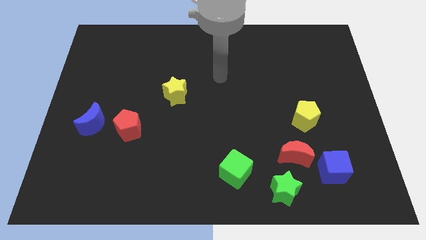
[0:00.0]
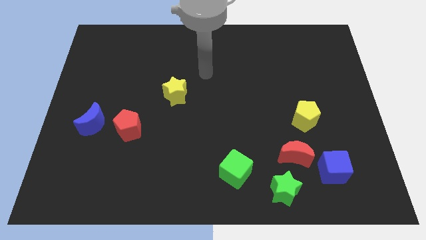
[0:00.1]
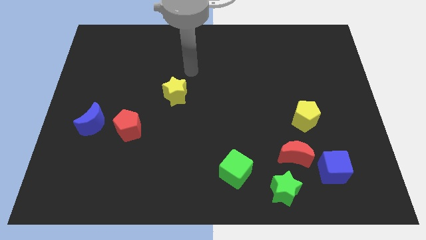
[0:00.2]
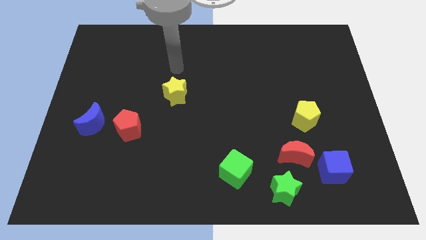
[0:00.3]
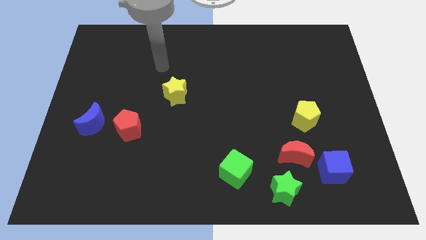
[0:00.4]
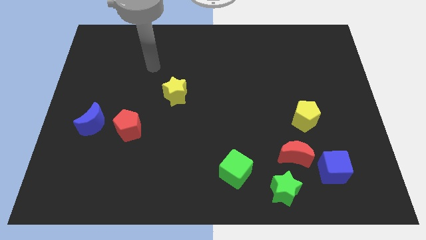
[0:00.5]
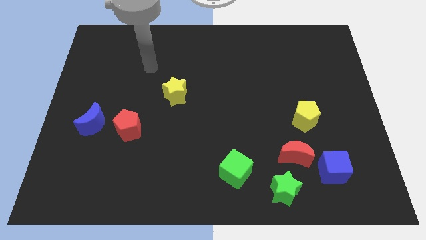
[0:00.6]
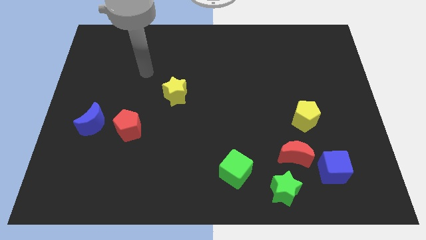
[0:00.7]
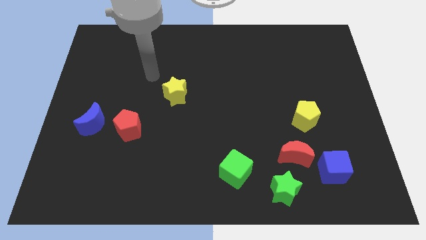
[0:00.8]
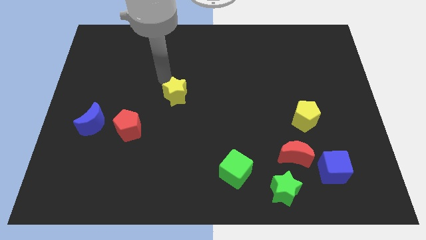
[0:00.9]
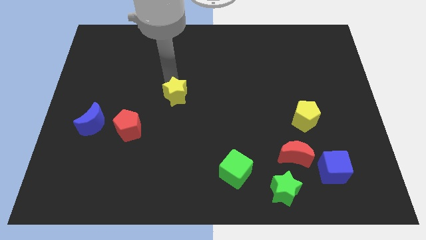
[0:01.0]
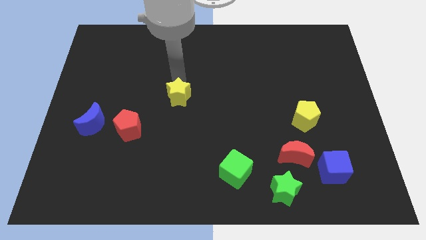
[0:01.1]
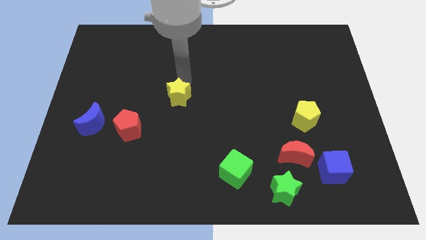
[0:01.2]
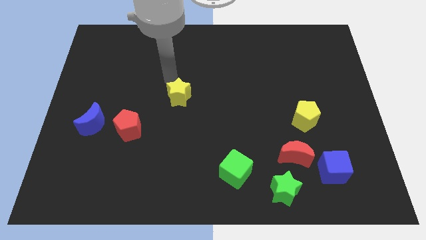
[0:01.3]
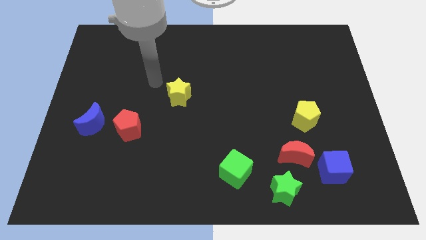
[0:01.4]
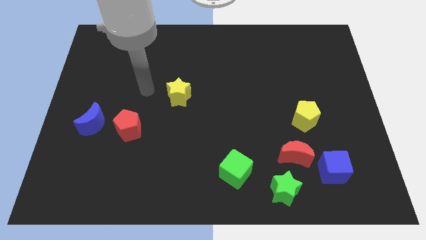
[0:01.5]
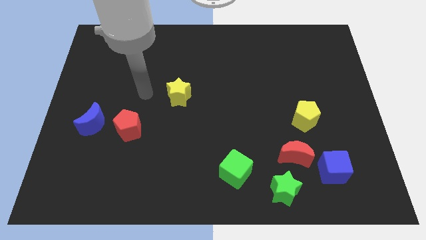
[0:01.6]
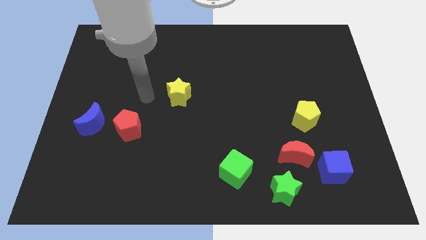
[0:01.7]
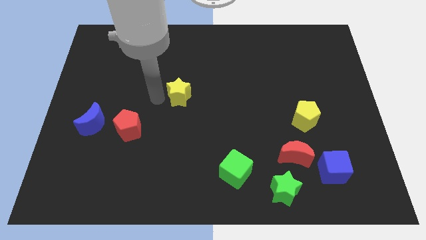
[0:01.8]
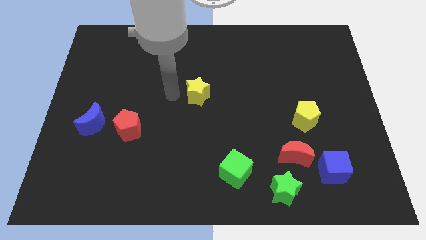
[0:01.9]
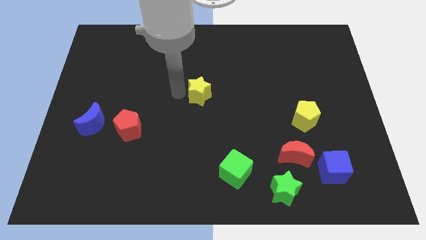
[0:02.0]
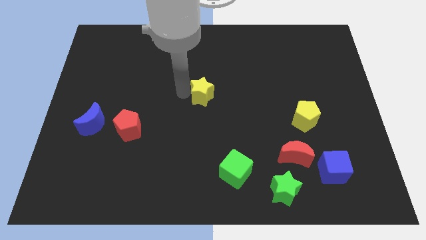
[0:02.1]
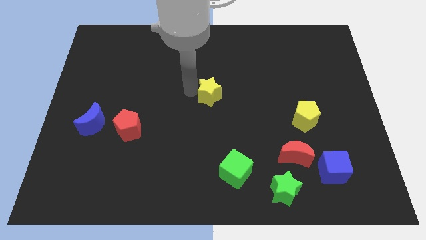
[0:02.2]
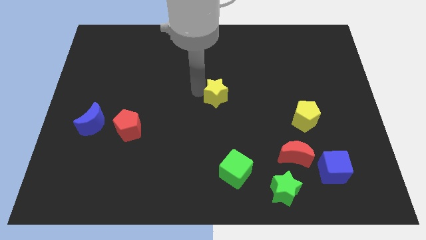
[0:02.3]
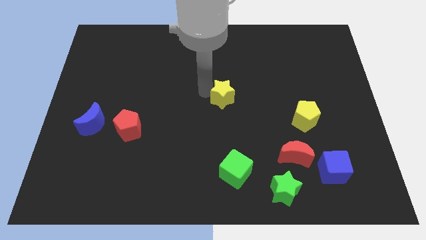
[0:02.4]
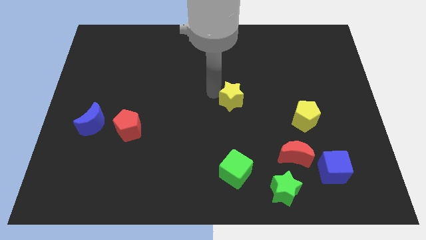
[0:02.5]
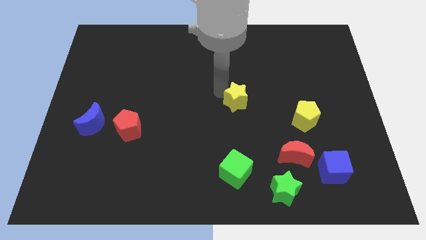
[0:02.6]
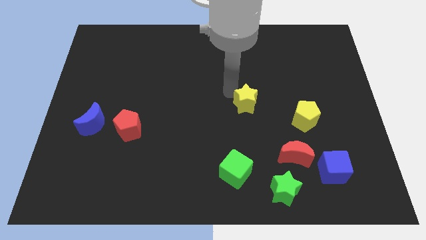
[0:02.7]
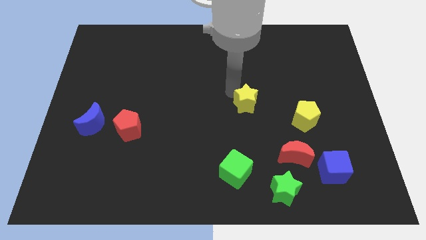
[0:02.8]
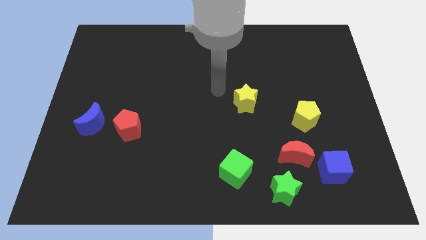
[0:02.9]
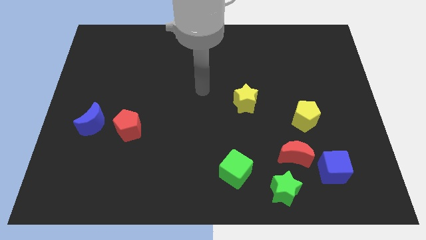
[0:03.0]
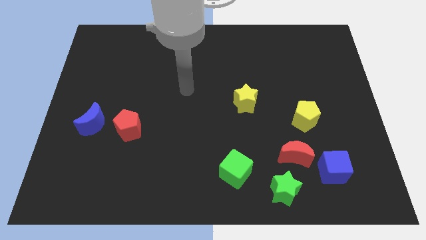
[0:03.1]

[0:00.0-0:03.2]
slide yellow star above green cube vertically

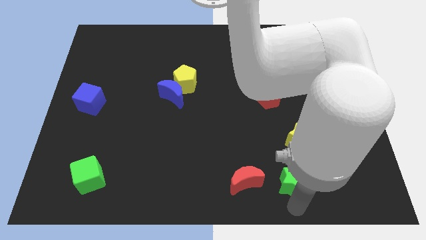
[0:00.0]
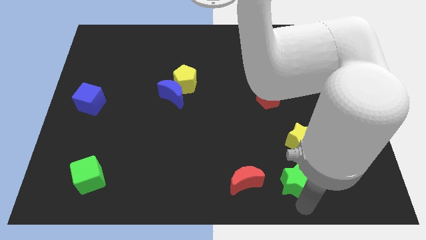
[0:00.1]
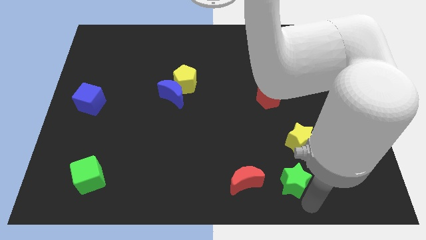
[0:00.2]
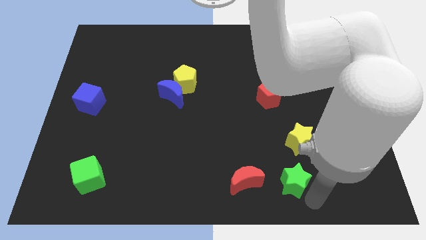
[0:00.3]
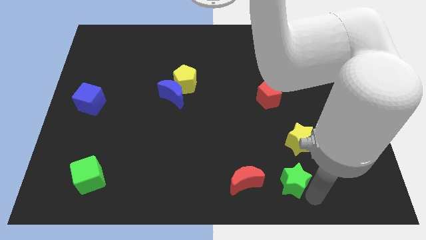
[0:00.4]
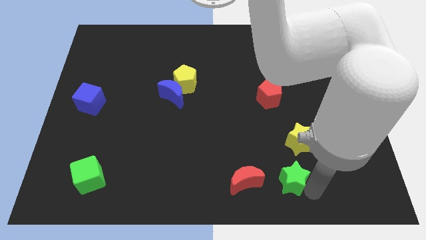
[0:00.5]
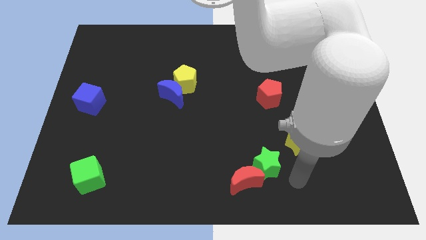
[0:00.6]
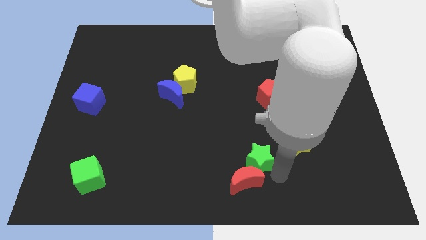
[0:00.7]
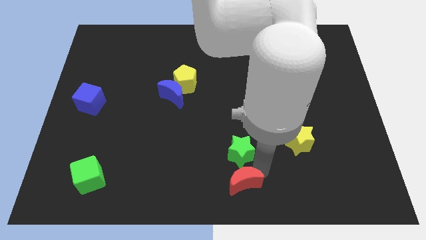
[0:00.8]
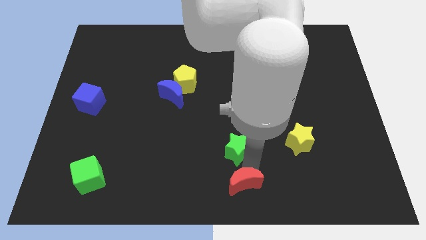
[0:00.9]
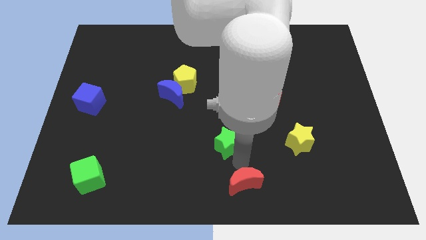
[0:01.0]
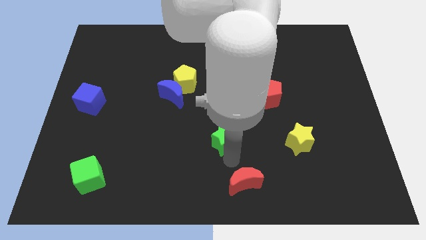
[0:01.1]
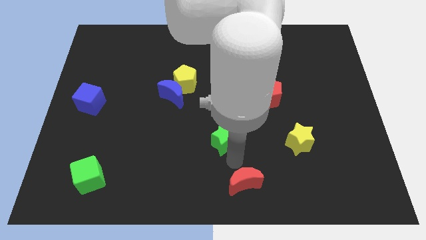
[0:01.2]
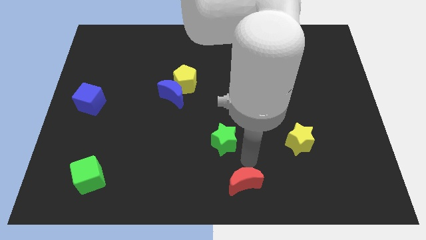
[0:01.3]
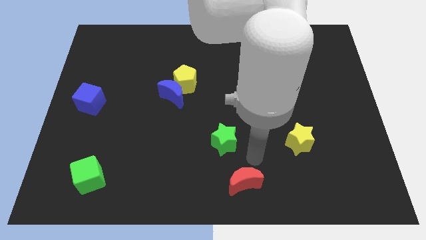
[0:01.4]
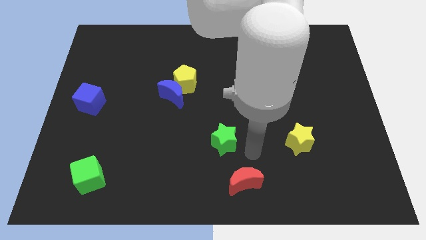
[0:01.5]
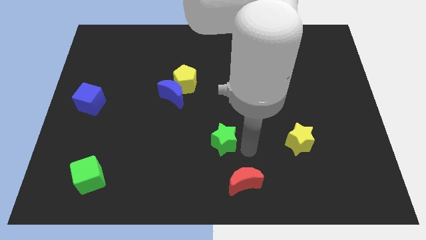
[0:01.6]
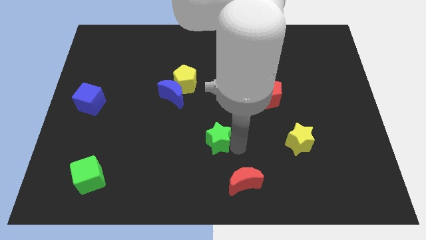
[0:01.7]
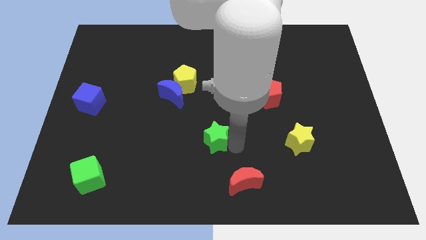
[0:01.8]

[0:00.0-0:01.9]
push the green star slightly to the center of the board

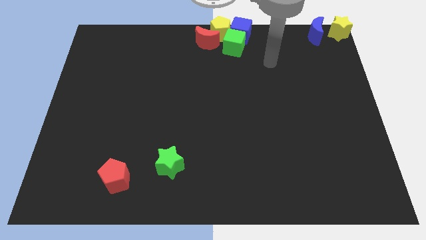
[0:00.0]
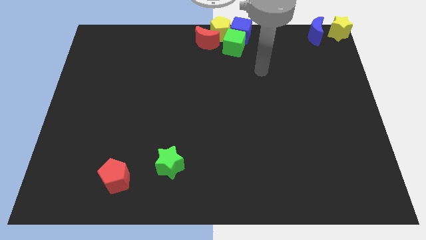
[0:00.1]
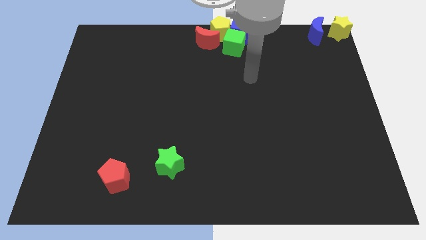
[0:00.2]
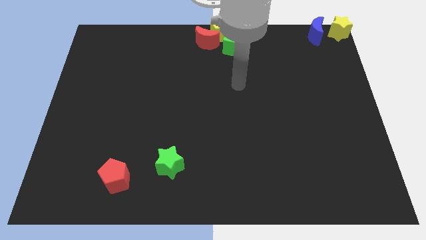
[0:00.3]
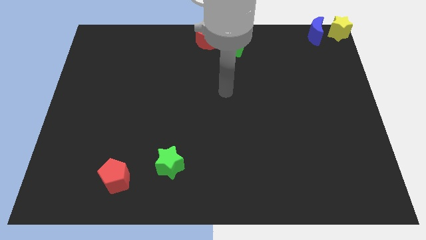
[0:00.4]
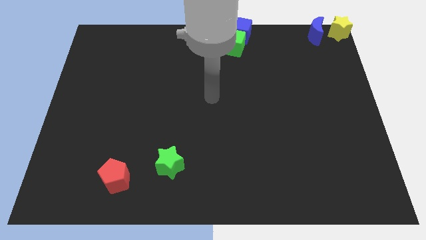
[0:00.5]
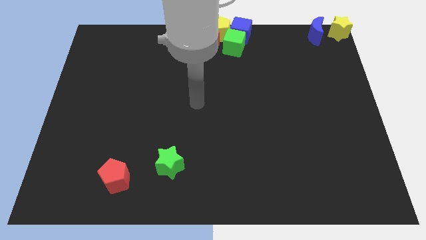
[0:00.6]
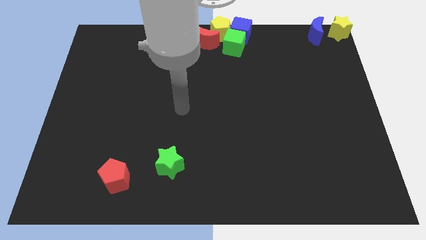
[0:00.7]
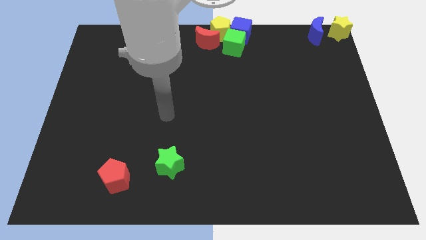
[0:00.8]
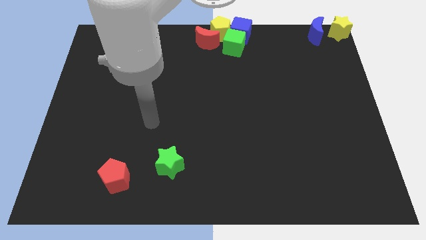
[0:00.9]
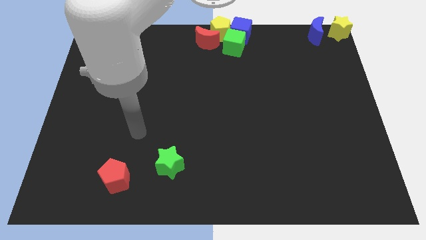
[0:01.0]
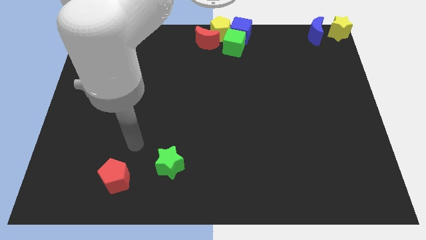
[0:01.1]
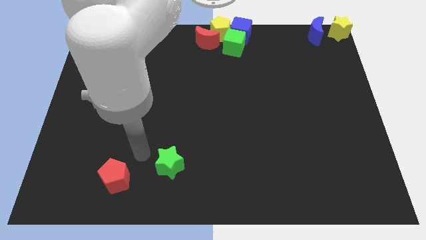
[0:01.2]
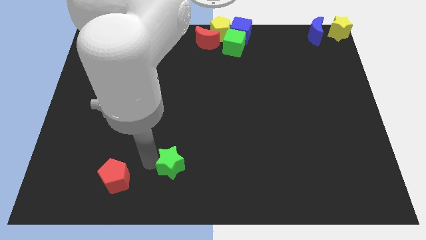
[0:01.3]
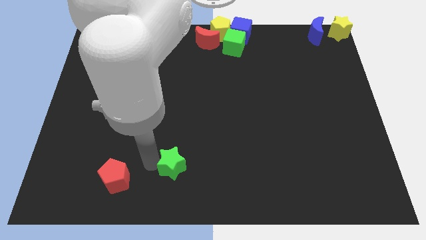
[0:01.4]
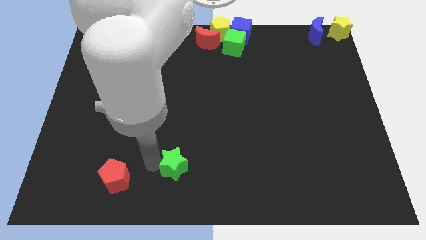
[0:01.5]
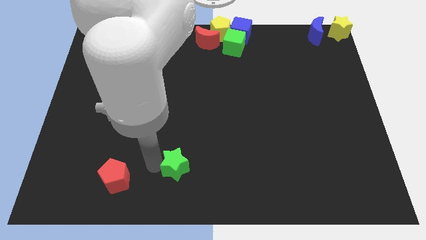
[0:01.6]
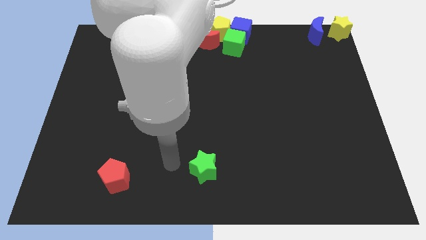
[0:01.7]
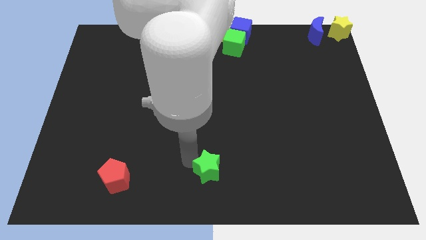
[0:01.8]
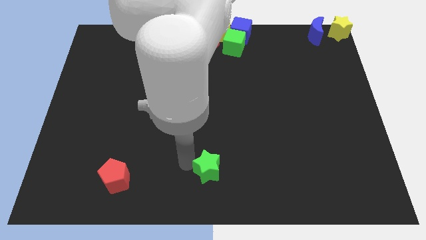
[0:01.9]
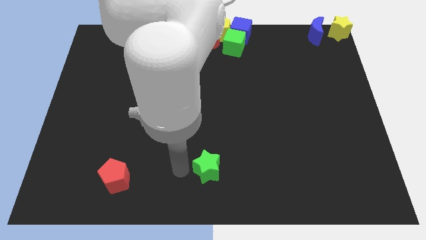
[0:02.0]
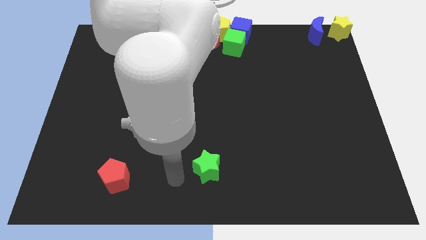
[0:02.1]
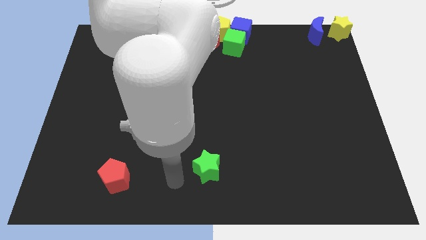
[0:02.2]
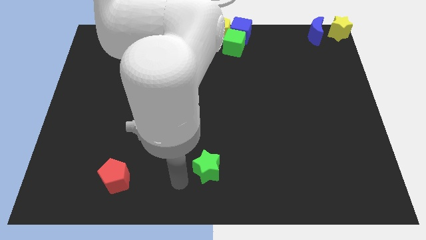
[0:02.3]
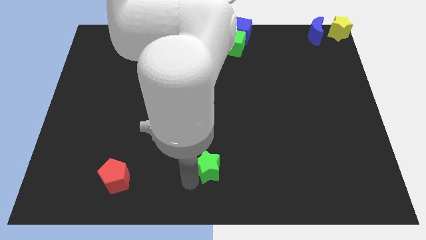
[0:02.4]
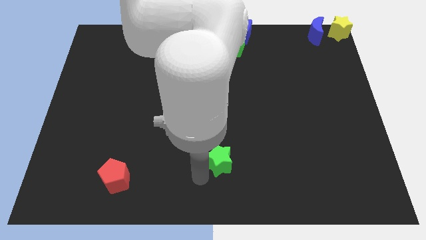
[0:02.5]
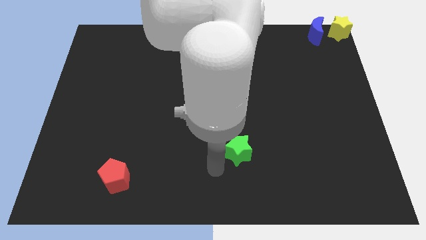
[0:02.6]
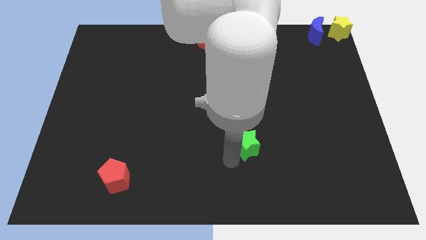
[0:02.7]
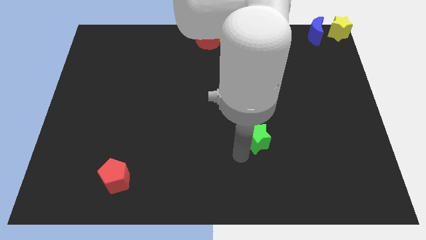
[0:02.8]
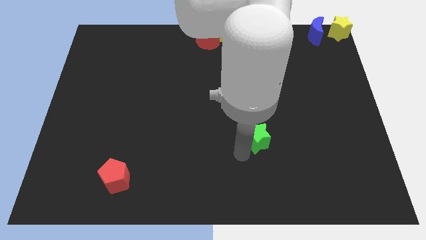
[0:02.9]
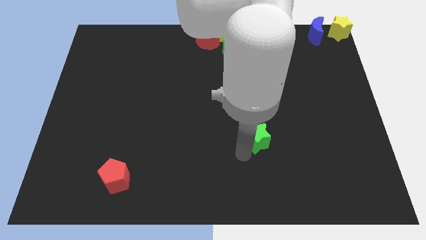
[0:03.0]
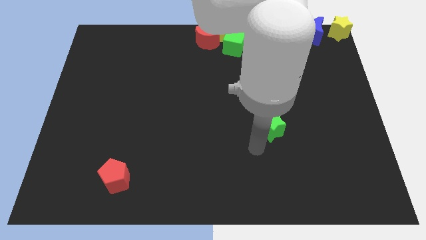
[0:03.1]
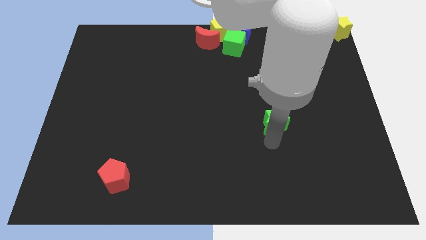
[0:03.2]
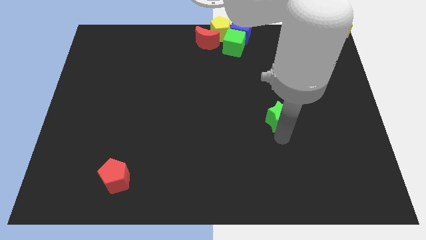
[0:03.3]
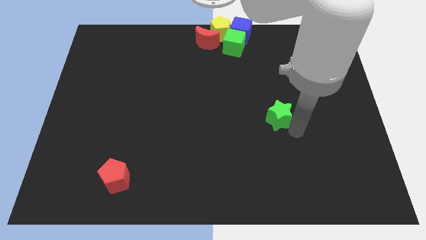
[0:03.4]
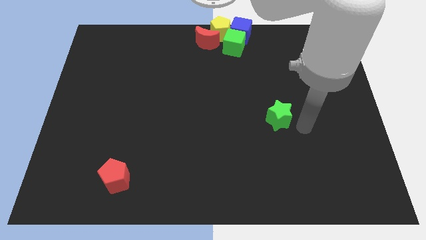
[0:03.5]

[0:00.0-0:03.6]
move the green star diagonally bottom right to the green cube

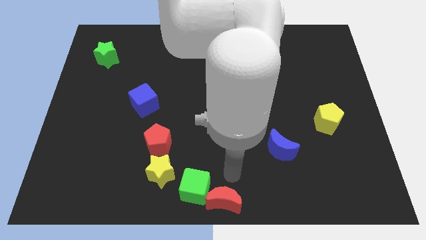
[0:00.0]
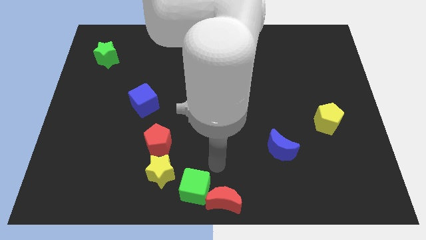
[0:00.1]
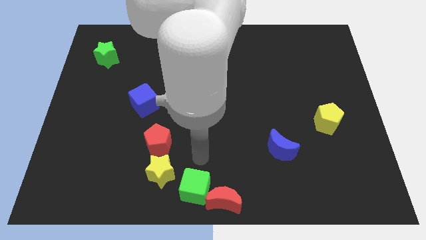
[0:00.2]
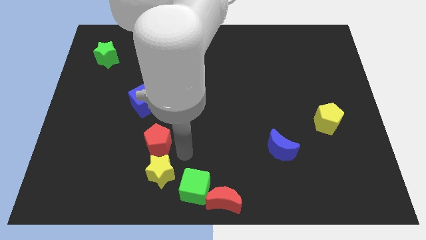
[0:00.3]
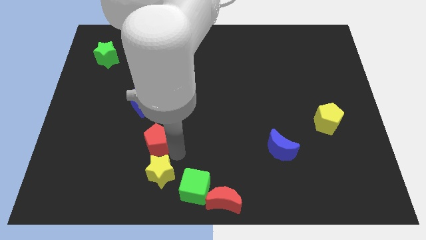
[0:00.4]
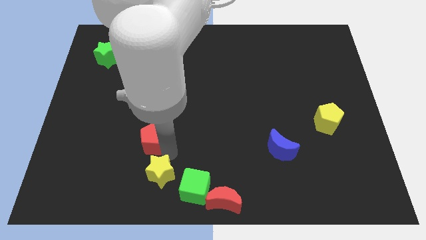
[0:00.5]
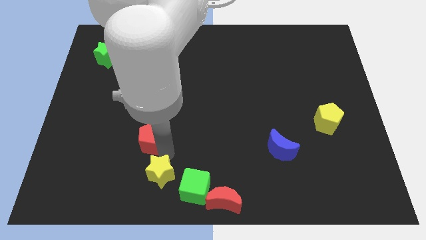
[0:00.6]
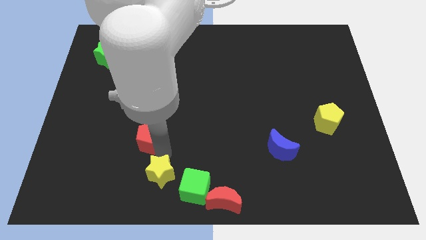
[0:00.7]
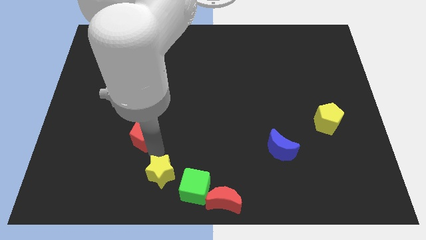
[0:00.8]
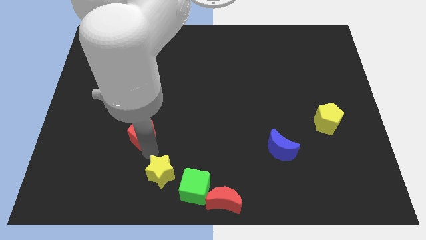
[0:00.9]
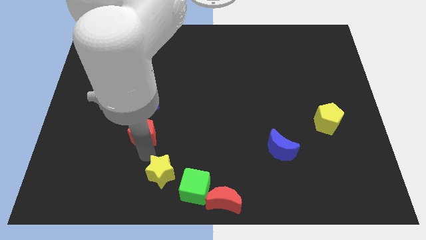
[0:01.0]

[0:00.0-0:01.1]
separate red pentagon and yellow star
